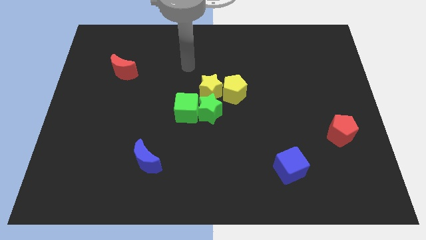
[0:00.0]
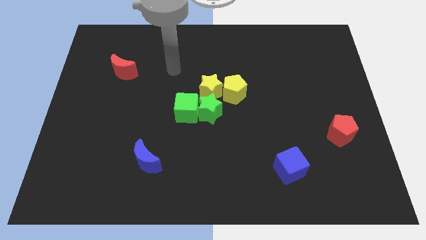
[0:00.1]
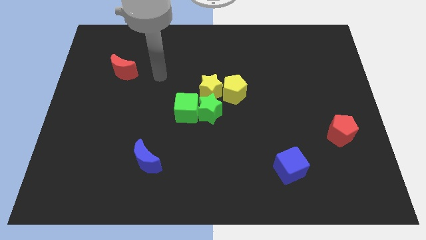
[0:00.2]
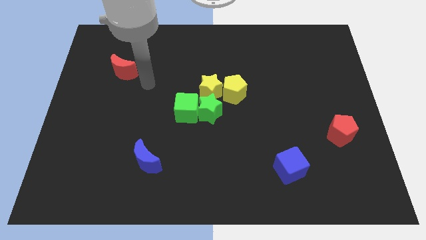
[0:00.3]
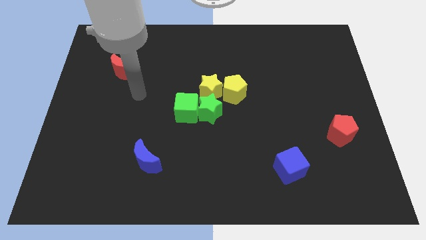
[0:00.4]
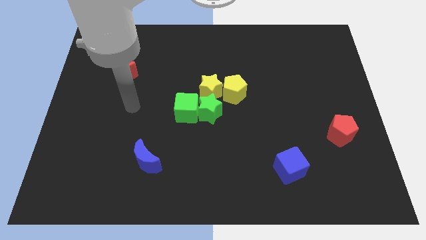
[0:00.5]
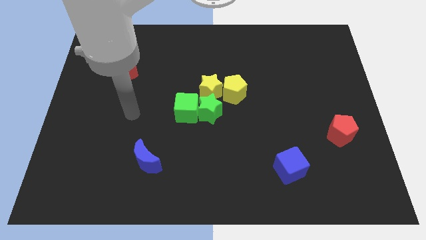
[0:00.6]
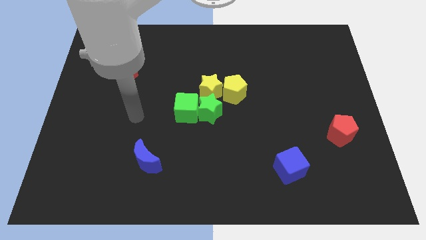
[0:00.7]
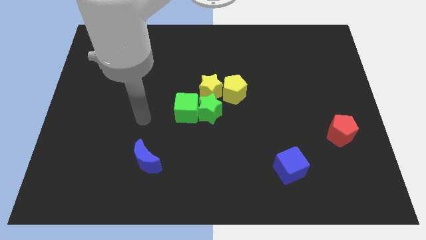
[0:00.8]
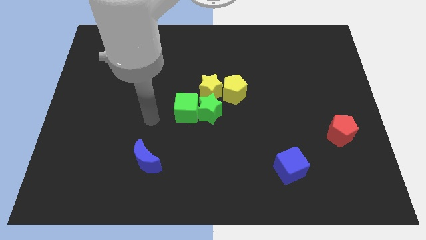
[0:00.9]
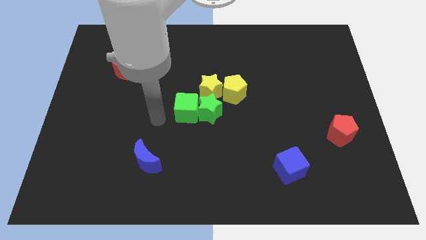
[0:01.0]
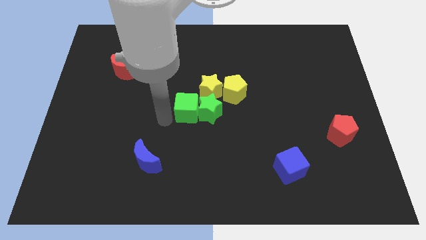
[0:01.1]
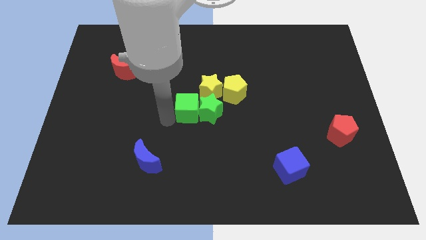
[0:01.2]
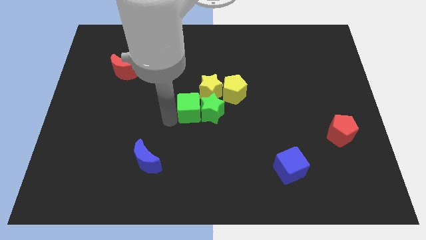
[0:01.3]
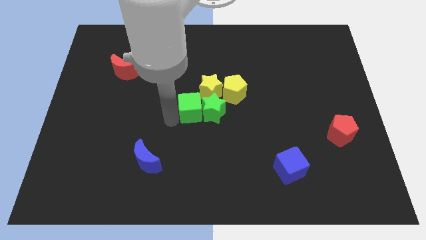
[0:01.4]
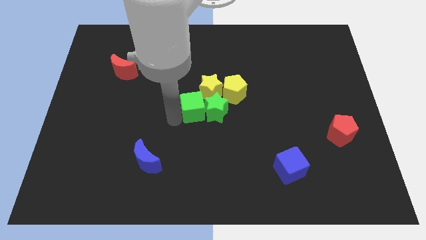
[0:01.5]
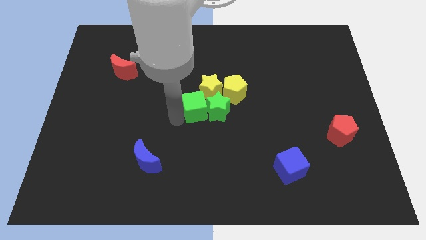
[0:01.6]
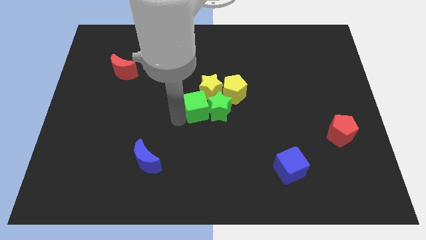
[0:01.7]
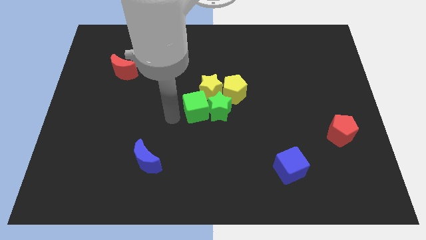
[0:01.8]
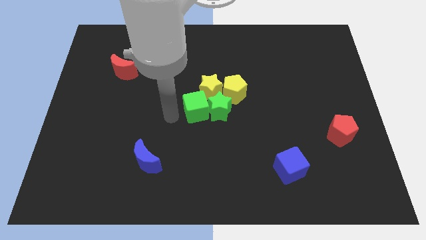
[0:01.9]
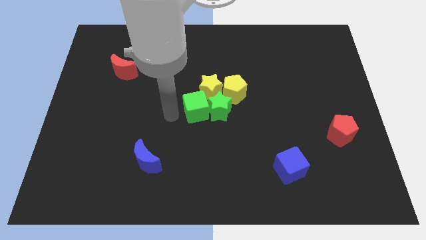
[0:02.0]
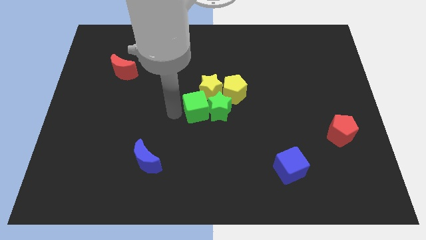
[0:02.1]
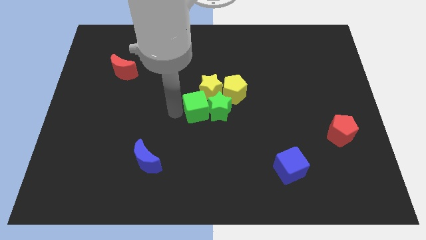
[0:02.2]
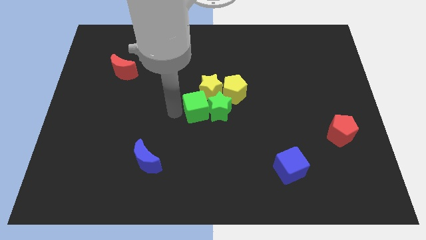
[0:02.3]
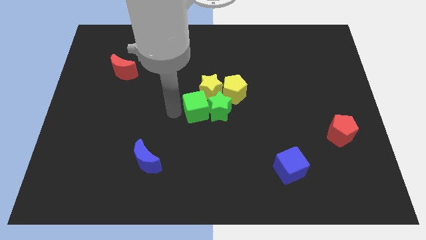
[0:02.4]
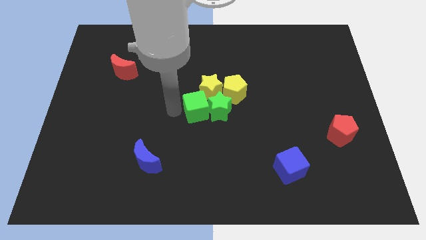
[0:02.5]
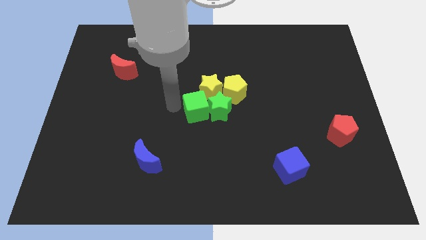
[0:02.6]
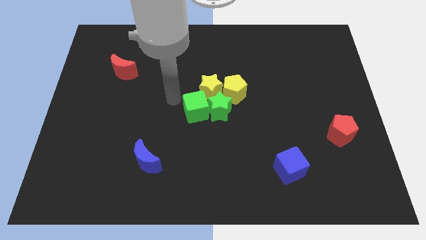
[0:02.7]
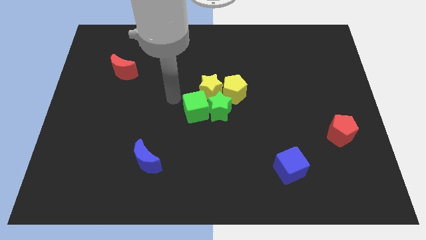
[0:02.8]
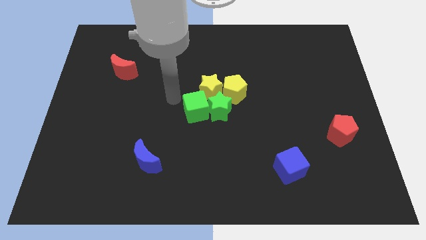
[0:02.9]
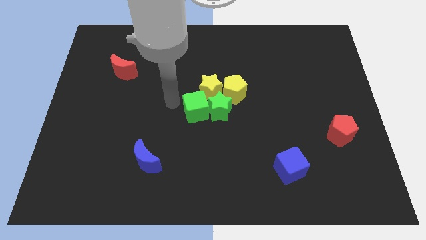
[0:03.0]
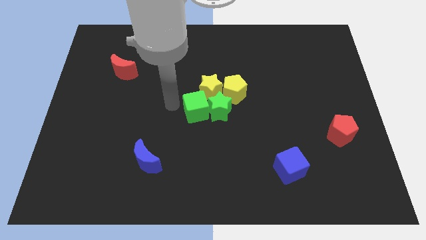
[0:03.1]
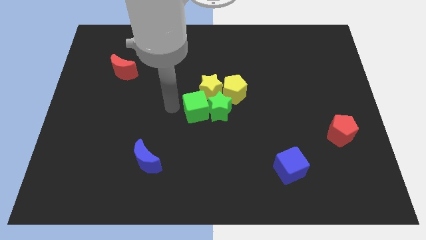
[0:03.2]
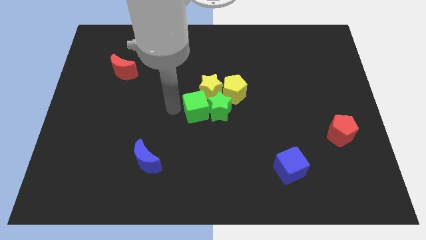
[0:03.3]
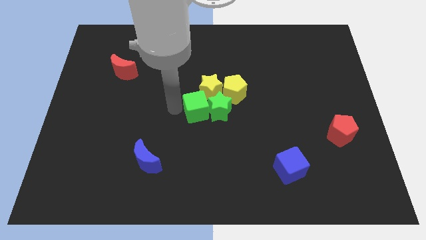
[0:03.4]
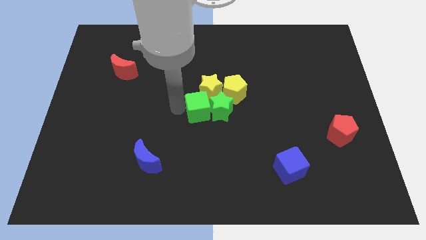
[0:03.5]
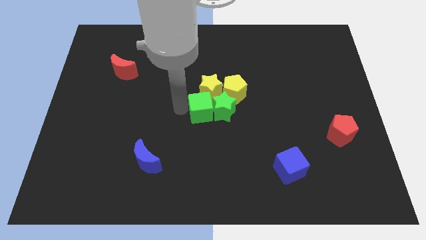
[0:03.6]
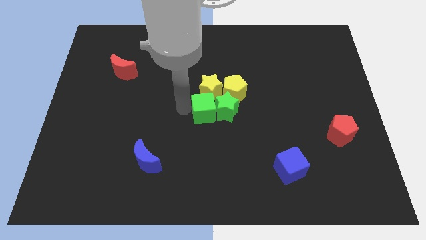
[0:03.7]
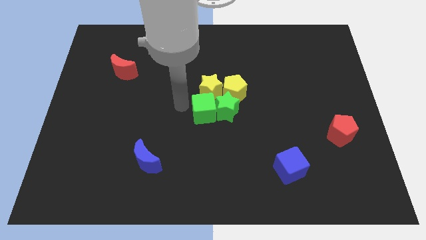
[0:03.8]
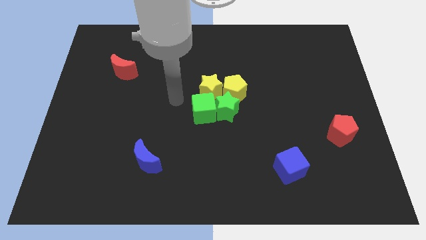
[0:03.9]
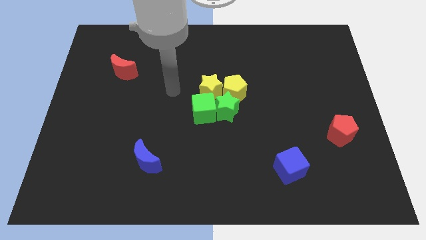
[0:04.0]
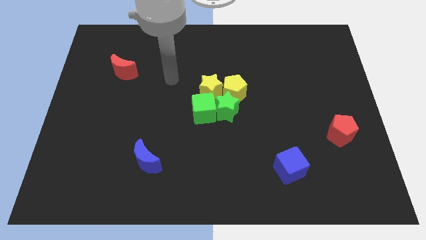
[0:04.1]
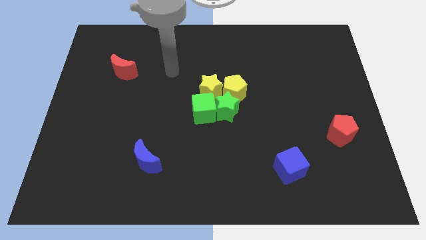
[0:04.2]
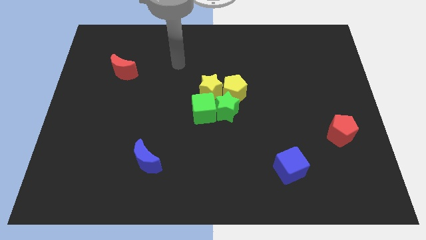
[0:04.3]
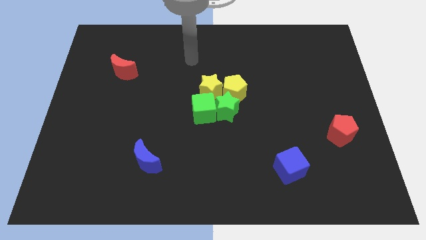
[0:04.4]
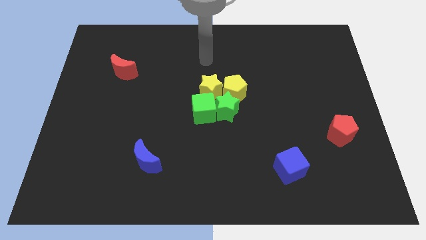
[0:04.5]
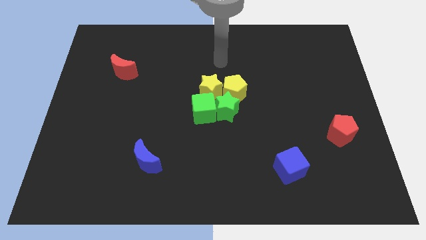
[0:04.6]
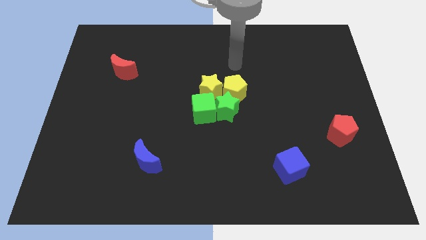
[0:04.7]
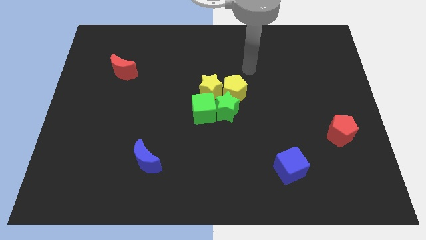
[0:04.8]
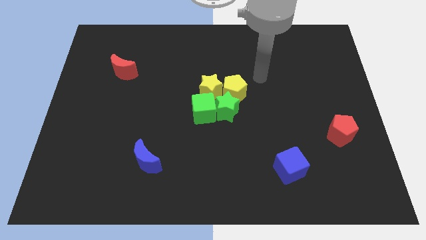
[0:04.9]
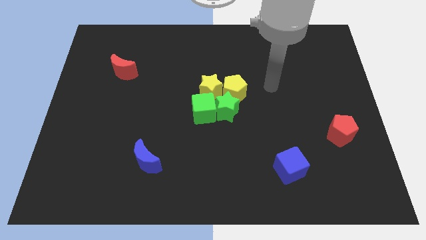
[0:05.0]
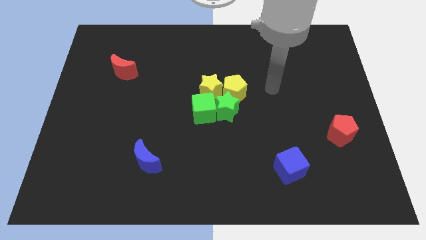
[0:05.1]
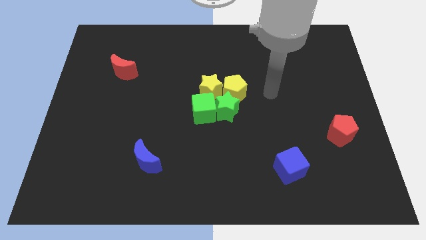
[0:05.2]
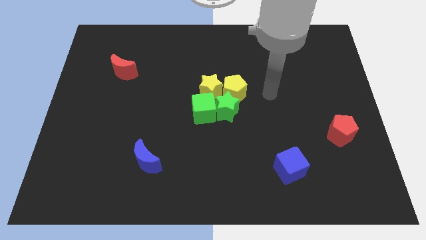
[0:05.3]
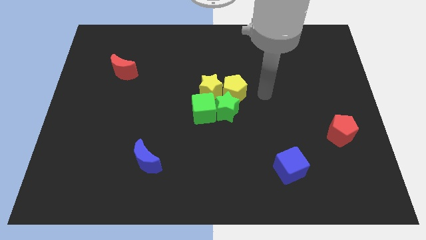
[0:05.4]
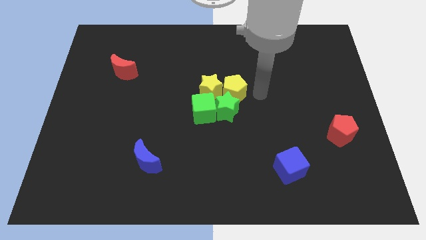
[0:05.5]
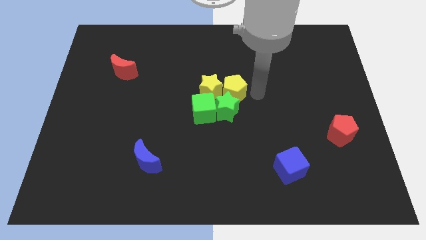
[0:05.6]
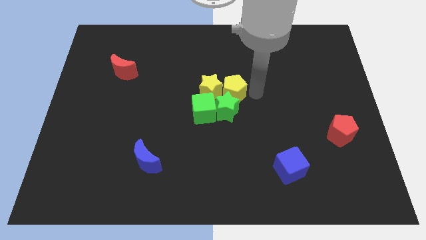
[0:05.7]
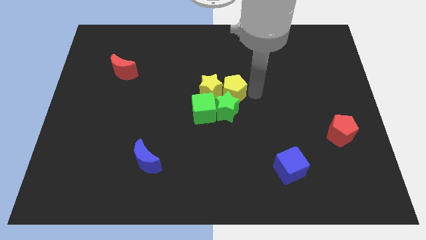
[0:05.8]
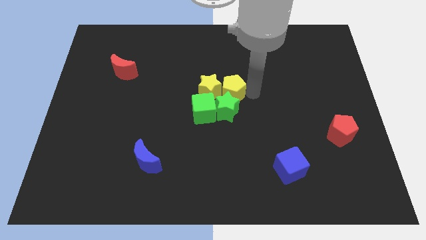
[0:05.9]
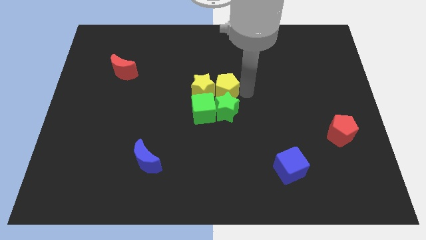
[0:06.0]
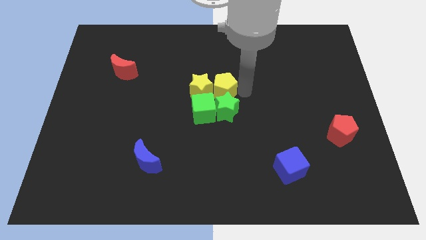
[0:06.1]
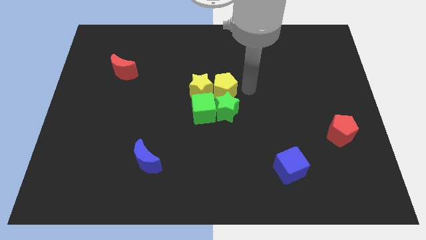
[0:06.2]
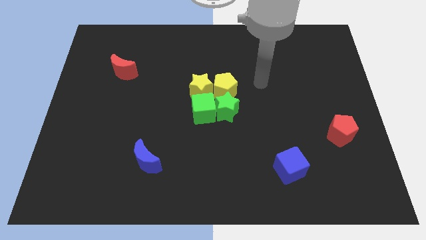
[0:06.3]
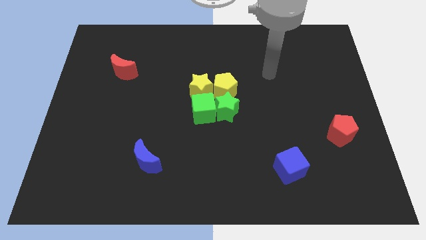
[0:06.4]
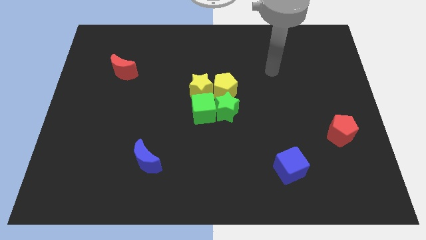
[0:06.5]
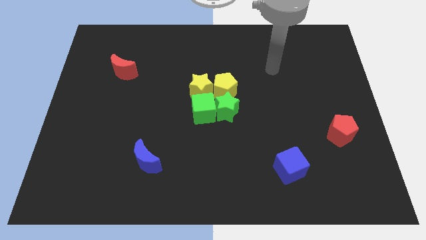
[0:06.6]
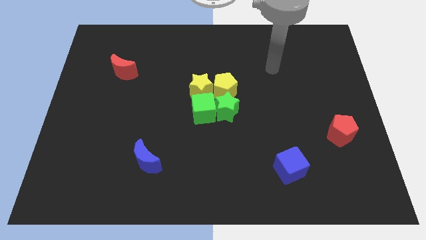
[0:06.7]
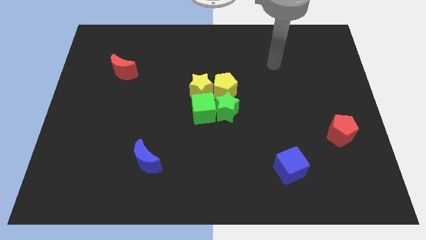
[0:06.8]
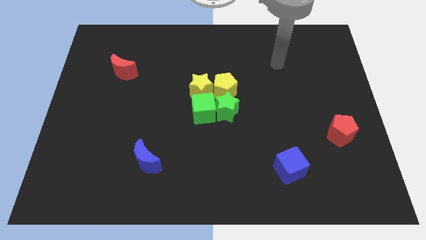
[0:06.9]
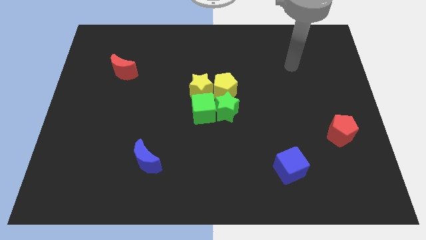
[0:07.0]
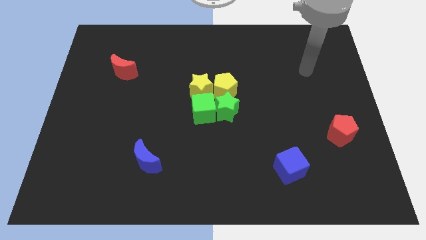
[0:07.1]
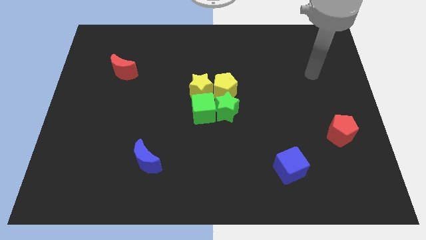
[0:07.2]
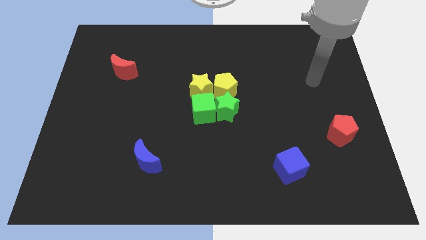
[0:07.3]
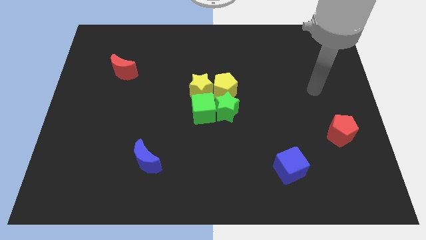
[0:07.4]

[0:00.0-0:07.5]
place the green and yellow blocks at the center of the board

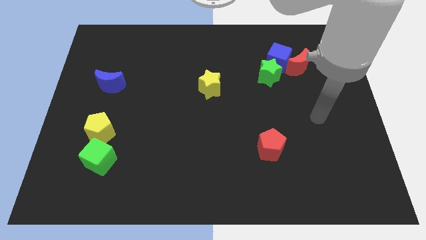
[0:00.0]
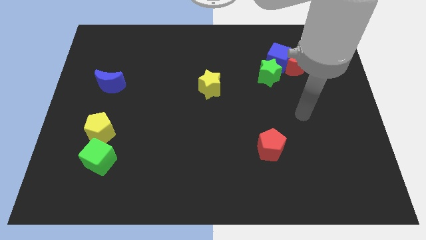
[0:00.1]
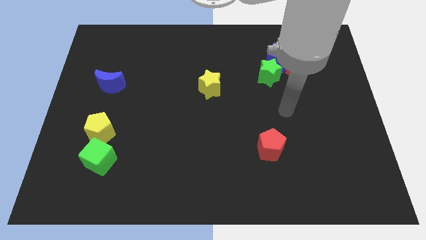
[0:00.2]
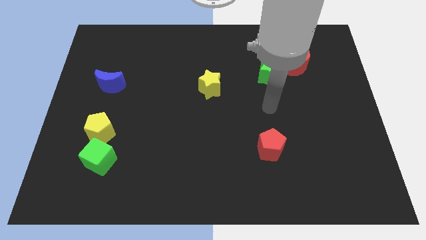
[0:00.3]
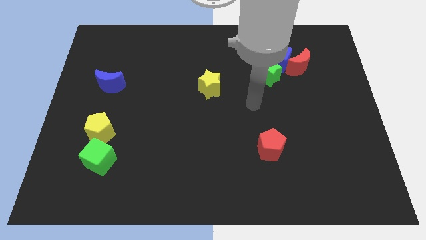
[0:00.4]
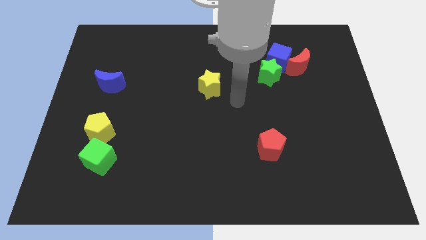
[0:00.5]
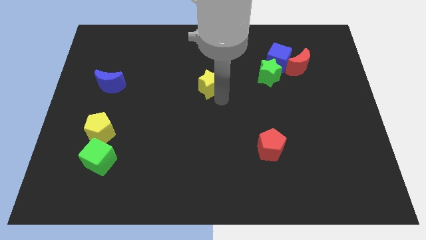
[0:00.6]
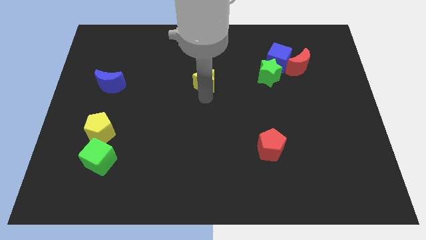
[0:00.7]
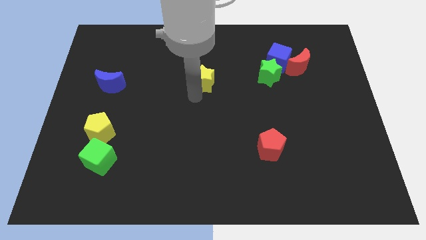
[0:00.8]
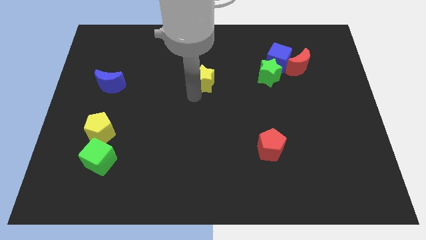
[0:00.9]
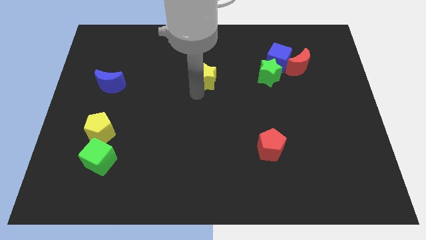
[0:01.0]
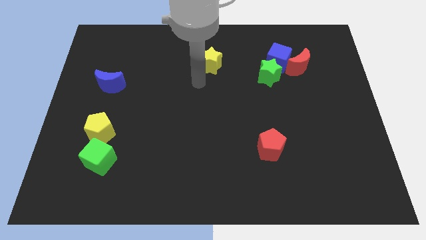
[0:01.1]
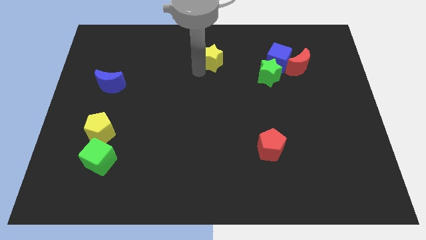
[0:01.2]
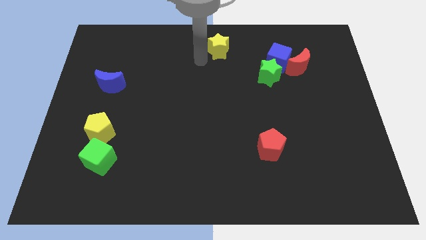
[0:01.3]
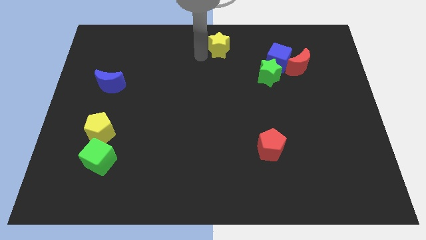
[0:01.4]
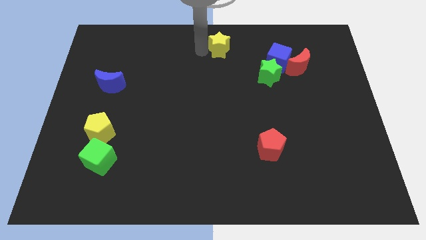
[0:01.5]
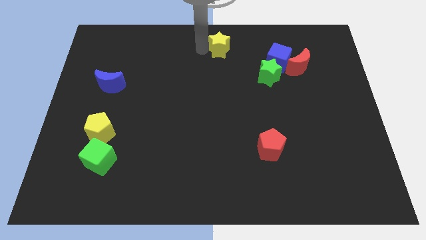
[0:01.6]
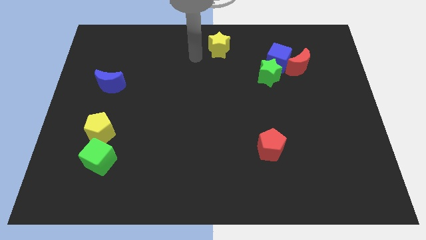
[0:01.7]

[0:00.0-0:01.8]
slider the yellow star diagonally top left to the green star
